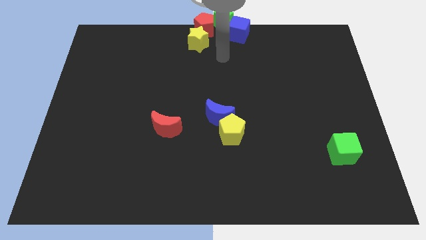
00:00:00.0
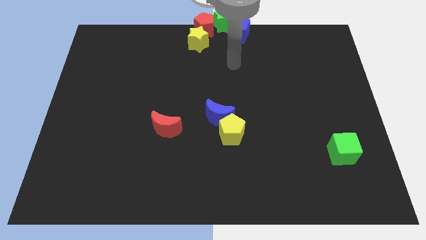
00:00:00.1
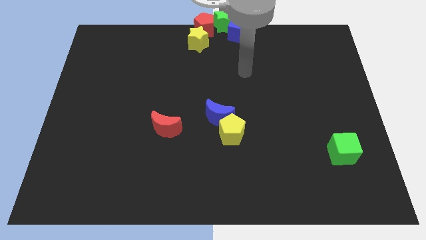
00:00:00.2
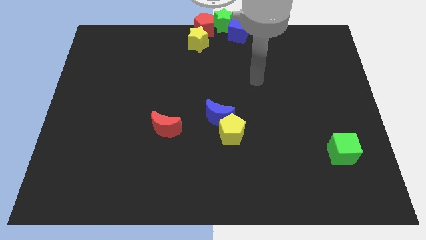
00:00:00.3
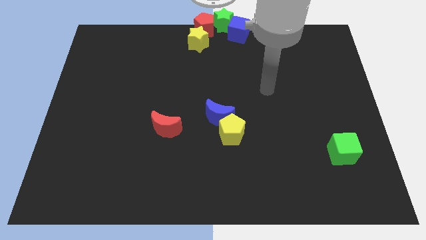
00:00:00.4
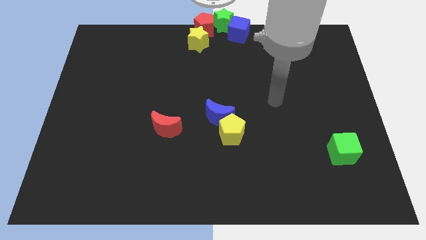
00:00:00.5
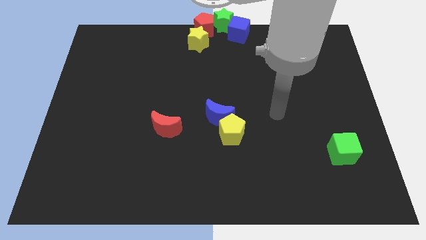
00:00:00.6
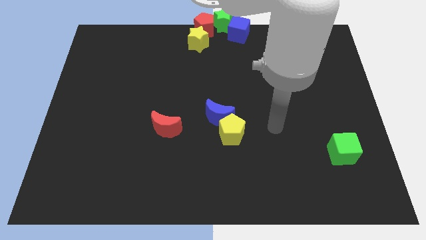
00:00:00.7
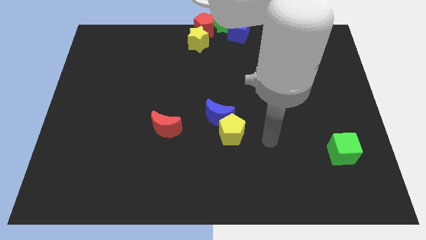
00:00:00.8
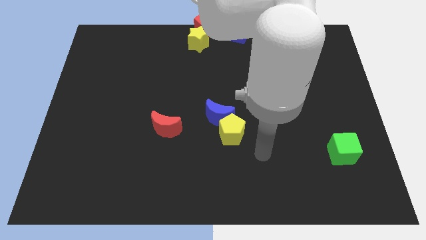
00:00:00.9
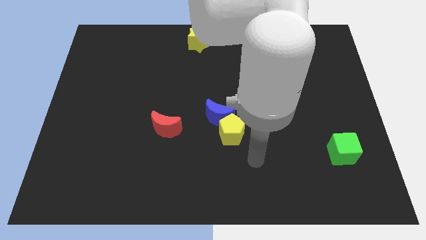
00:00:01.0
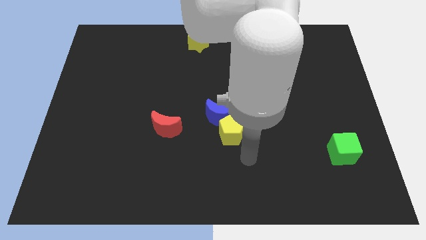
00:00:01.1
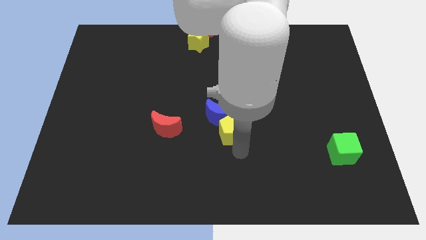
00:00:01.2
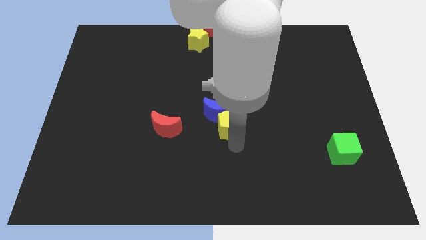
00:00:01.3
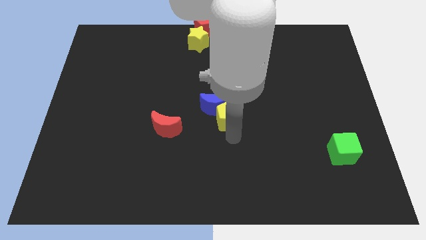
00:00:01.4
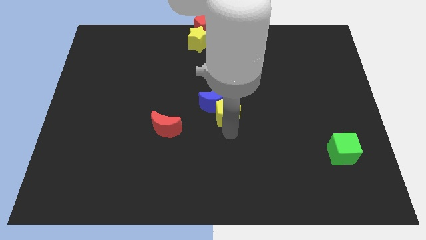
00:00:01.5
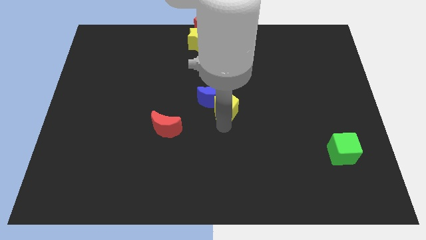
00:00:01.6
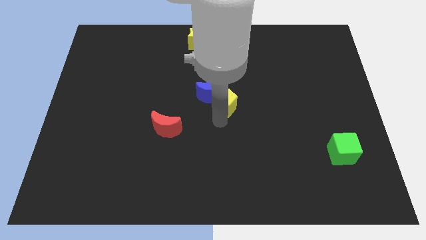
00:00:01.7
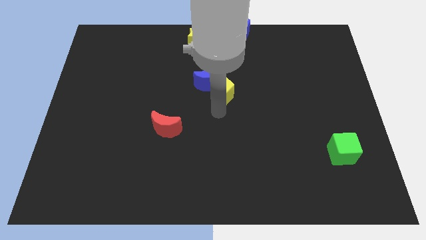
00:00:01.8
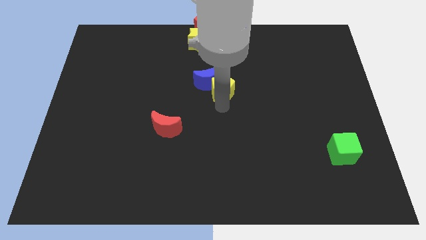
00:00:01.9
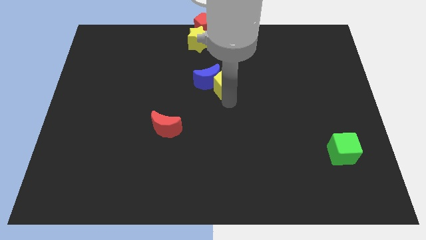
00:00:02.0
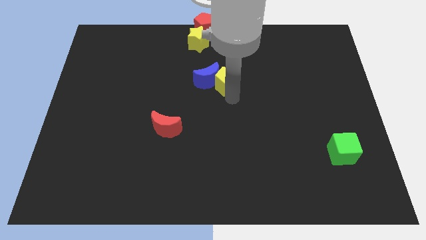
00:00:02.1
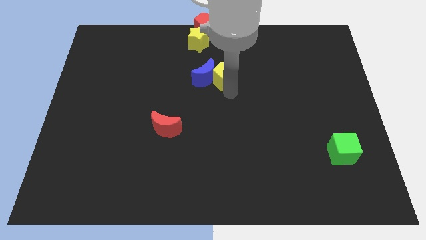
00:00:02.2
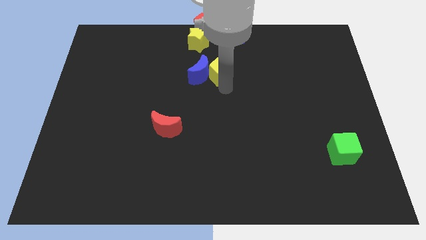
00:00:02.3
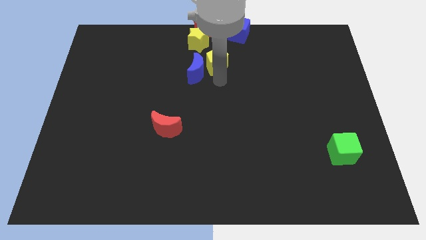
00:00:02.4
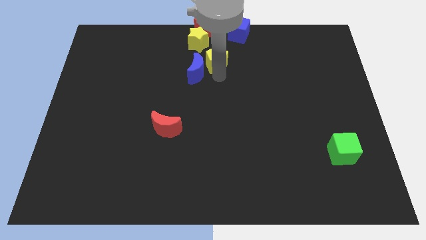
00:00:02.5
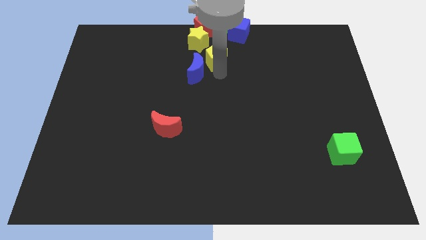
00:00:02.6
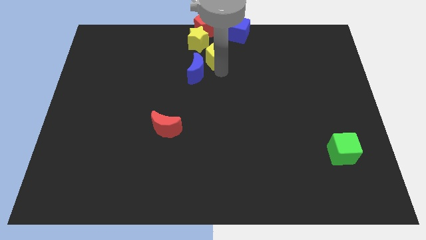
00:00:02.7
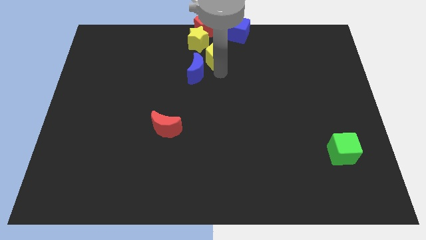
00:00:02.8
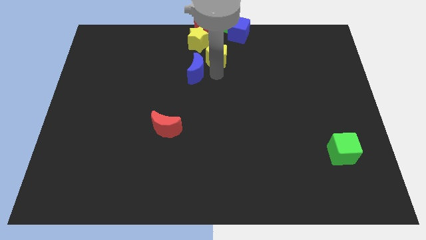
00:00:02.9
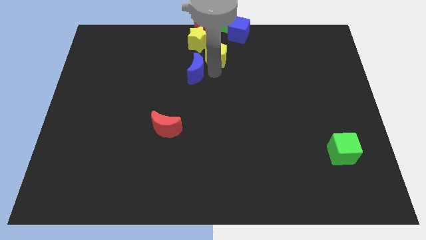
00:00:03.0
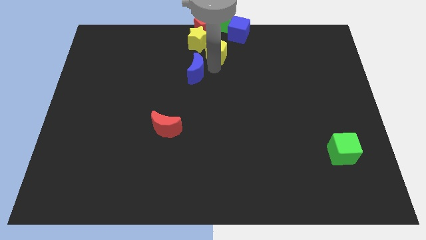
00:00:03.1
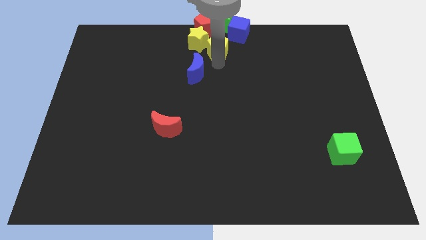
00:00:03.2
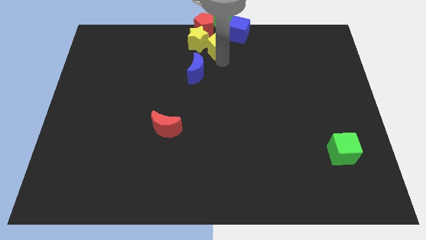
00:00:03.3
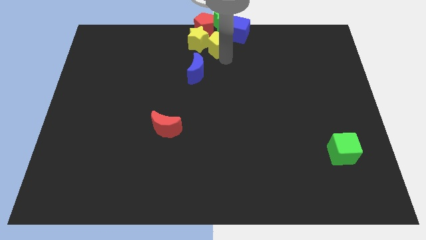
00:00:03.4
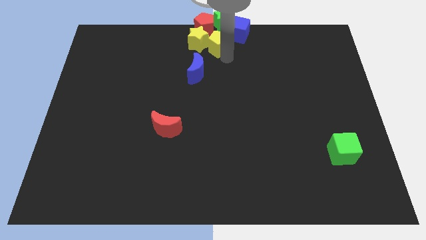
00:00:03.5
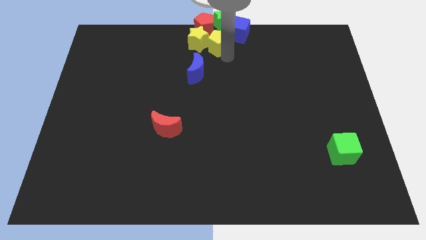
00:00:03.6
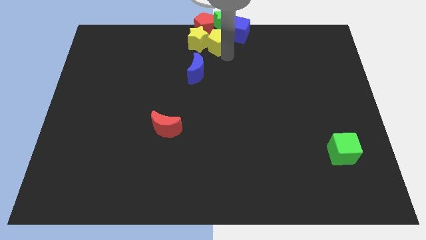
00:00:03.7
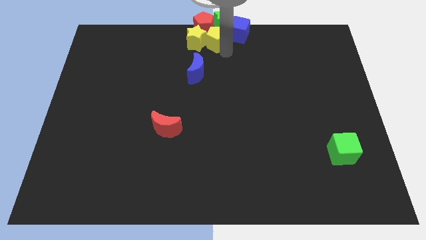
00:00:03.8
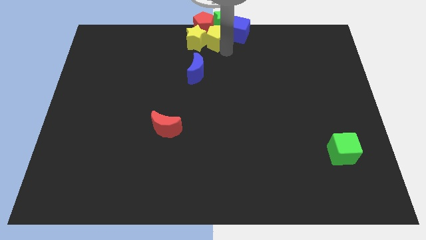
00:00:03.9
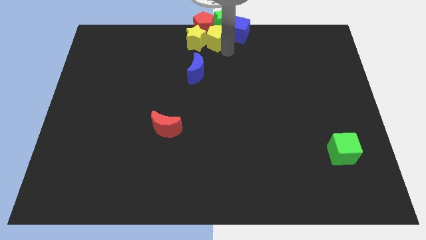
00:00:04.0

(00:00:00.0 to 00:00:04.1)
move the yellow pentagon to the right side of the yellow star

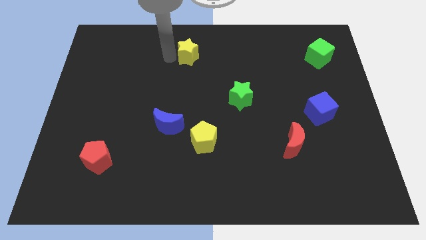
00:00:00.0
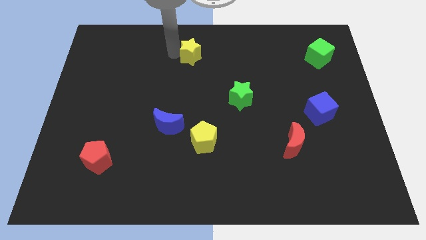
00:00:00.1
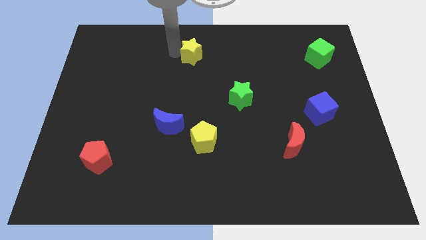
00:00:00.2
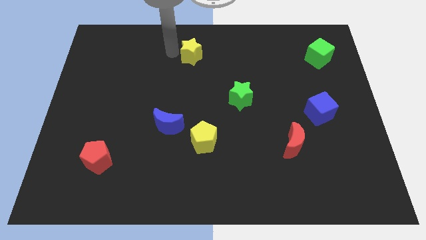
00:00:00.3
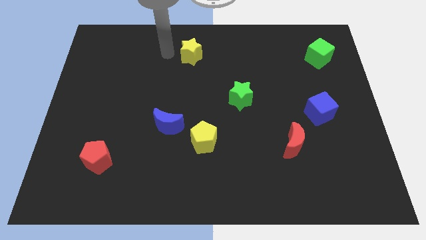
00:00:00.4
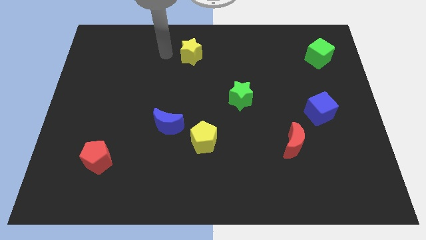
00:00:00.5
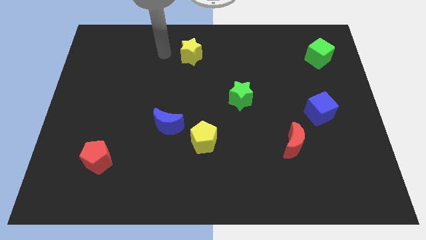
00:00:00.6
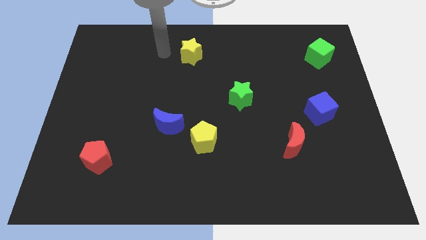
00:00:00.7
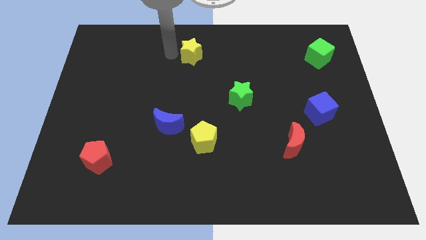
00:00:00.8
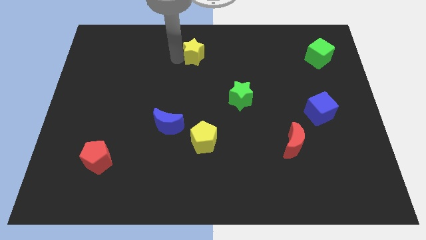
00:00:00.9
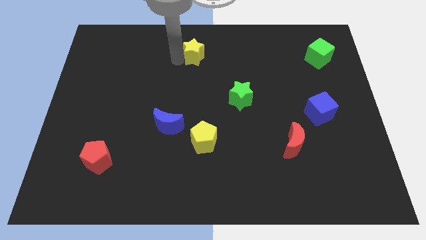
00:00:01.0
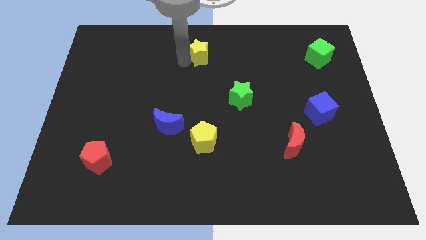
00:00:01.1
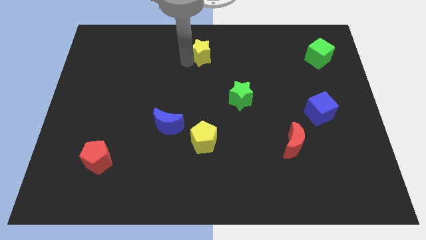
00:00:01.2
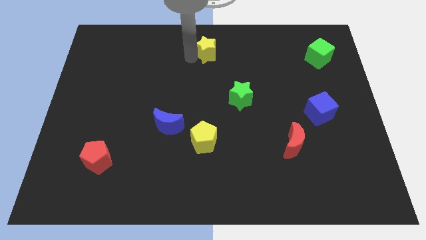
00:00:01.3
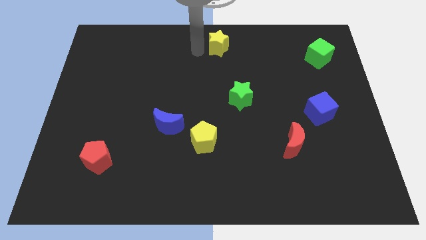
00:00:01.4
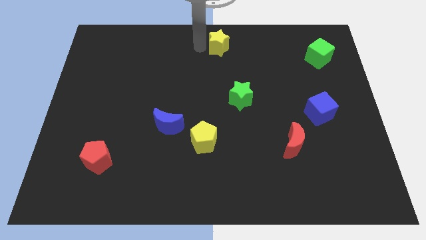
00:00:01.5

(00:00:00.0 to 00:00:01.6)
move the yellow star up slightly

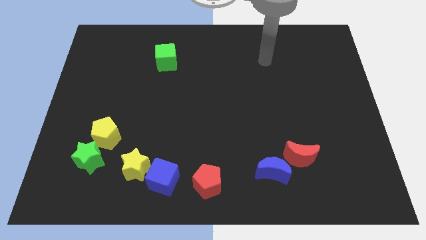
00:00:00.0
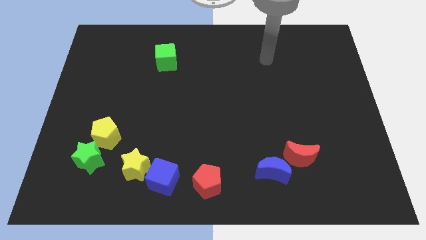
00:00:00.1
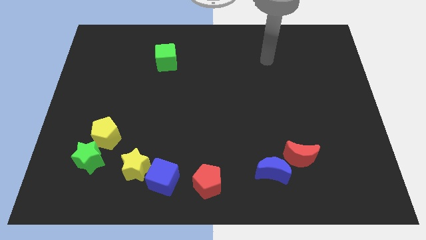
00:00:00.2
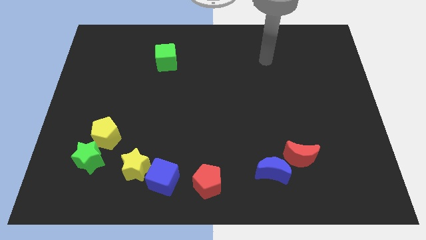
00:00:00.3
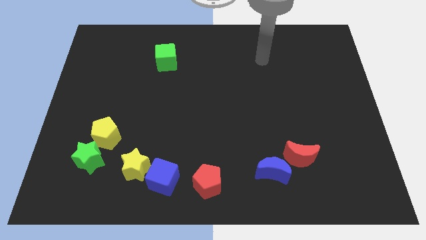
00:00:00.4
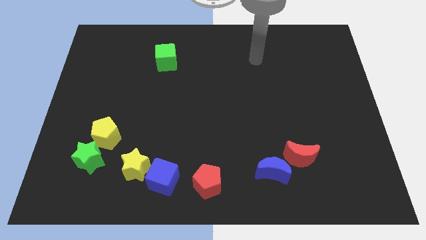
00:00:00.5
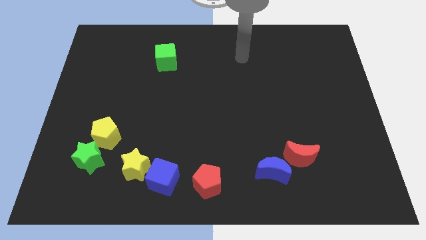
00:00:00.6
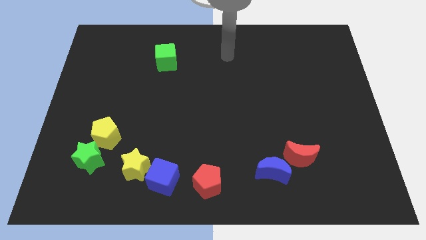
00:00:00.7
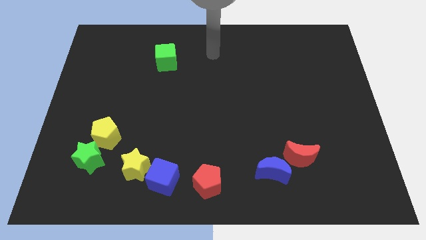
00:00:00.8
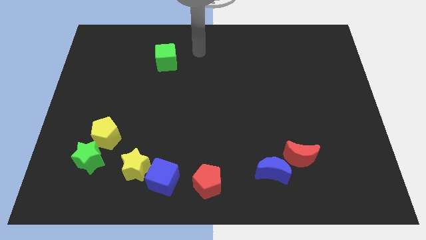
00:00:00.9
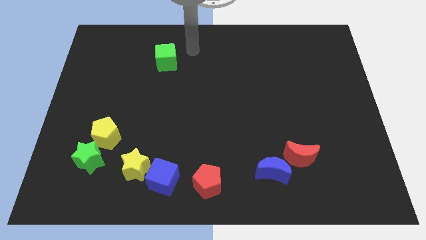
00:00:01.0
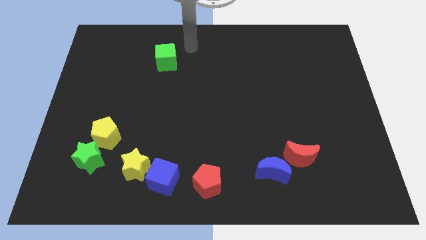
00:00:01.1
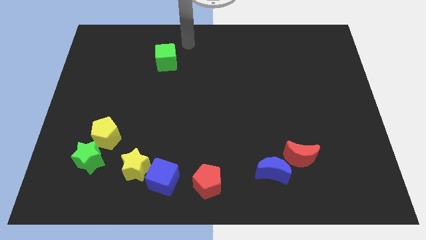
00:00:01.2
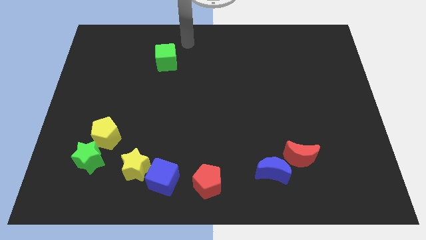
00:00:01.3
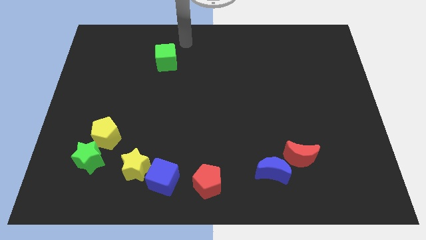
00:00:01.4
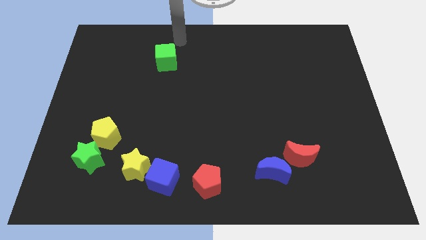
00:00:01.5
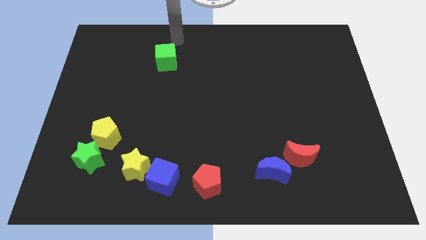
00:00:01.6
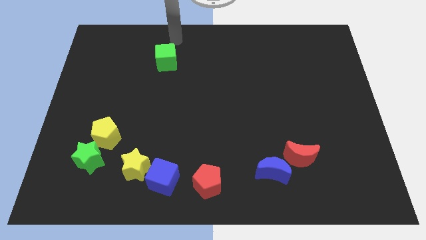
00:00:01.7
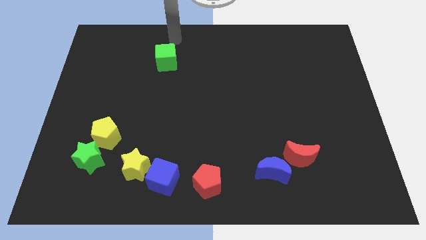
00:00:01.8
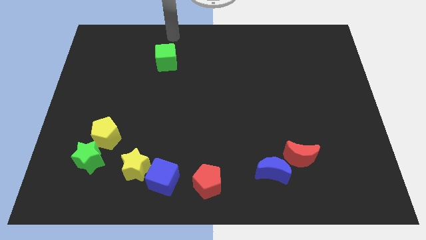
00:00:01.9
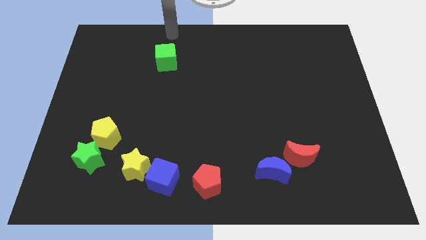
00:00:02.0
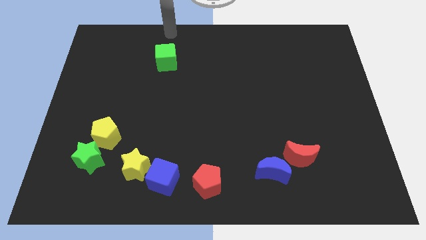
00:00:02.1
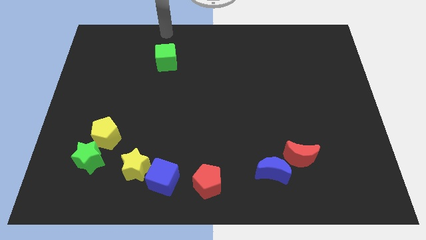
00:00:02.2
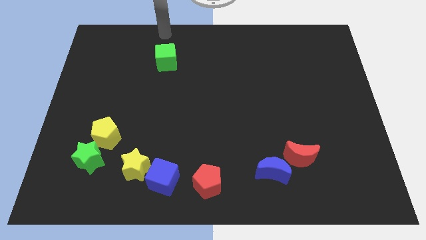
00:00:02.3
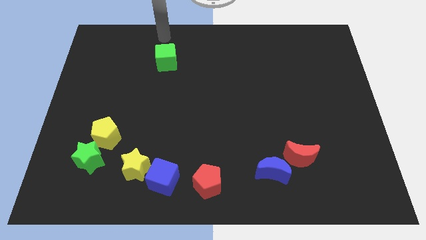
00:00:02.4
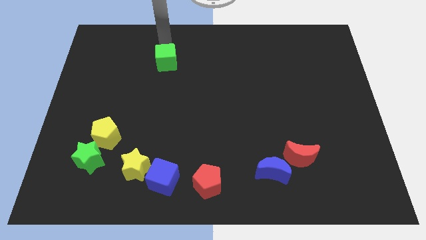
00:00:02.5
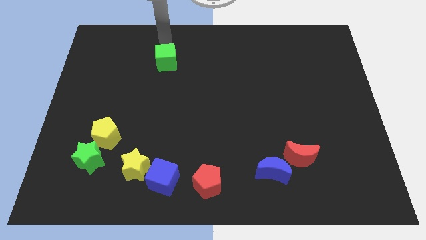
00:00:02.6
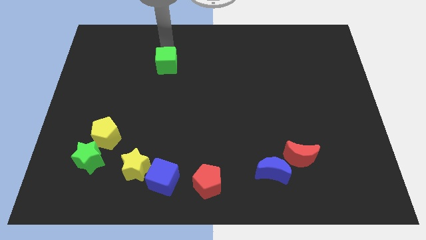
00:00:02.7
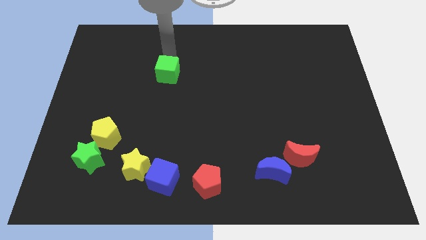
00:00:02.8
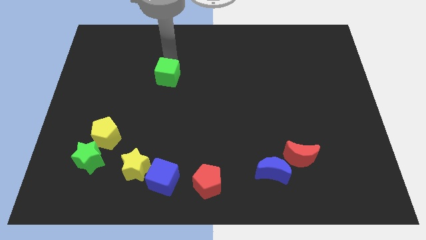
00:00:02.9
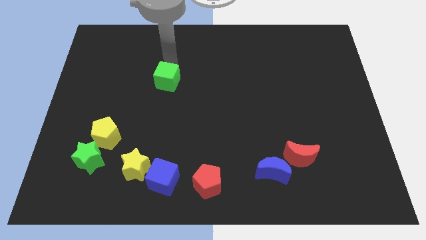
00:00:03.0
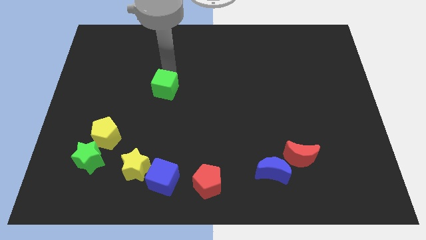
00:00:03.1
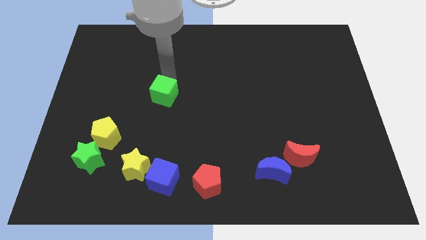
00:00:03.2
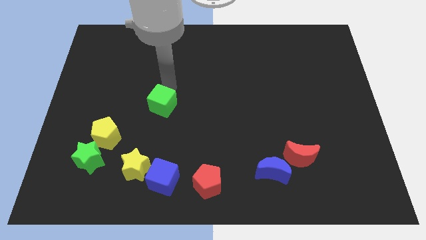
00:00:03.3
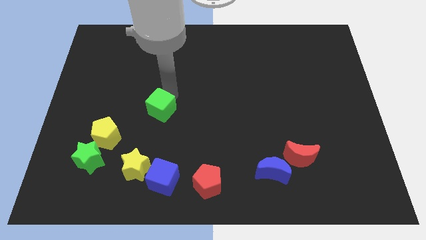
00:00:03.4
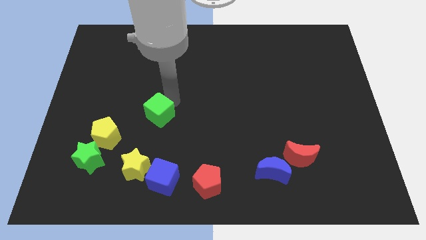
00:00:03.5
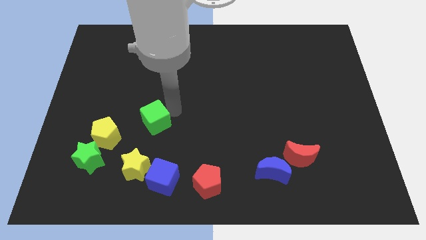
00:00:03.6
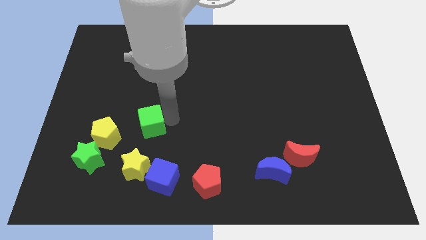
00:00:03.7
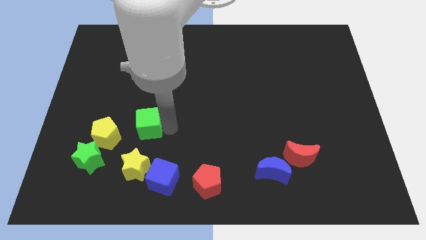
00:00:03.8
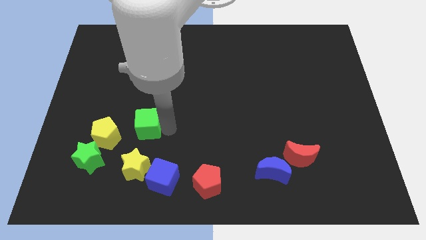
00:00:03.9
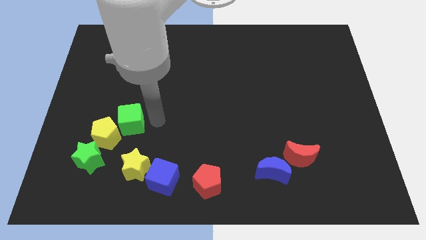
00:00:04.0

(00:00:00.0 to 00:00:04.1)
push the green cube to the top side of the yellow star
